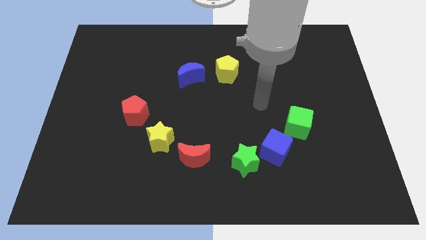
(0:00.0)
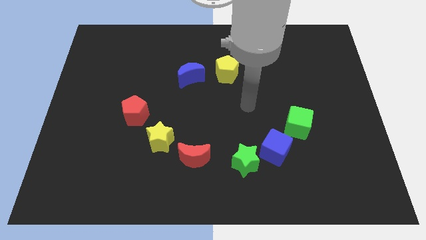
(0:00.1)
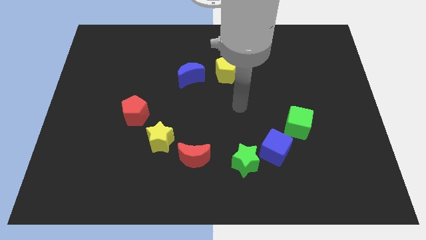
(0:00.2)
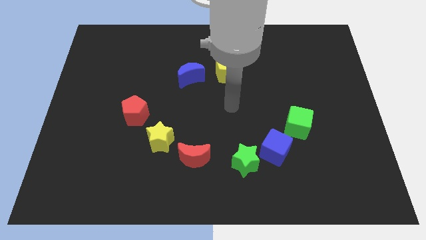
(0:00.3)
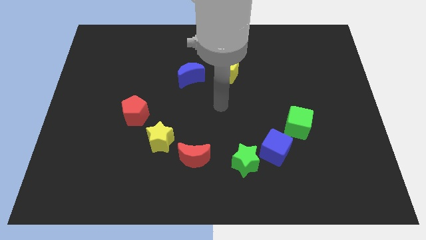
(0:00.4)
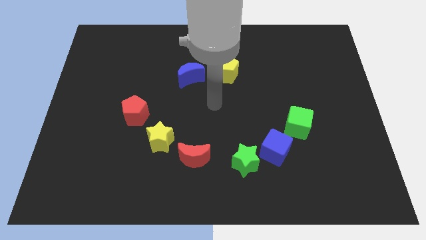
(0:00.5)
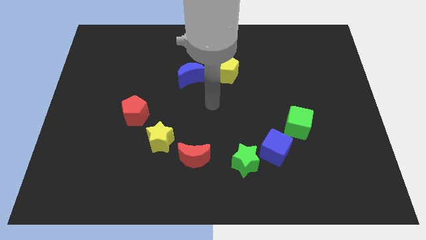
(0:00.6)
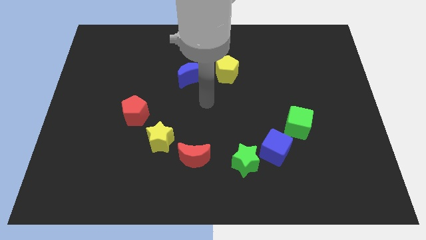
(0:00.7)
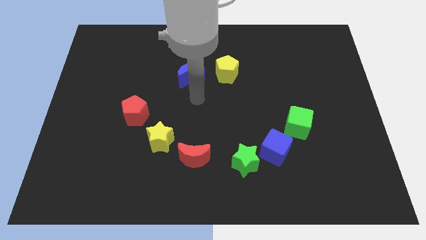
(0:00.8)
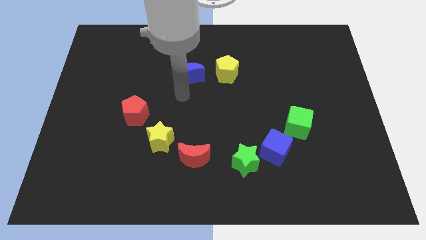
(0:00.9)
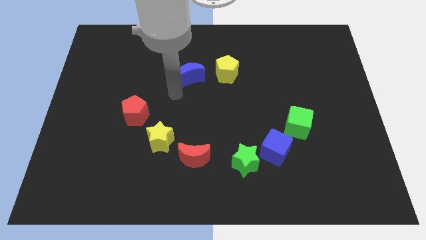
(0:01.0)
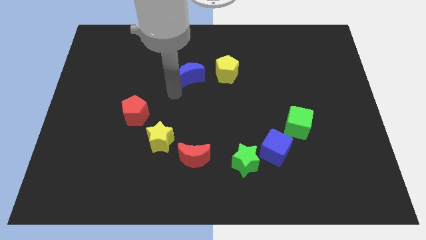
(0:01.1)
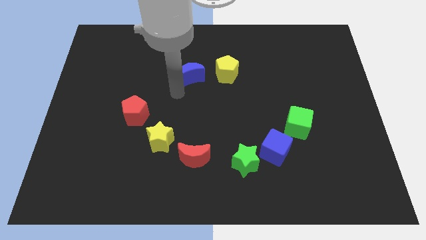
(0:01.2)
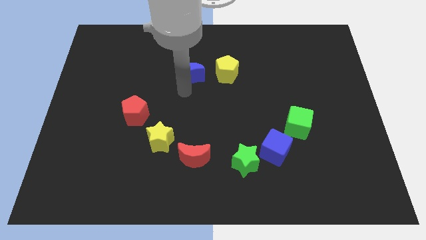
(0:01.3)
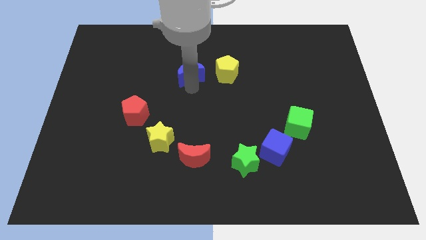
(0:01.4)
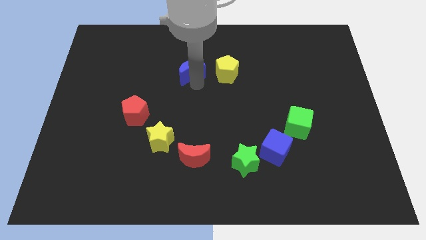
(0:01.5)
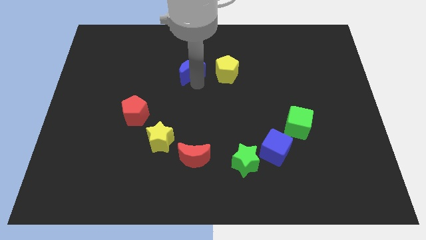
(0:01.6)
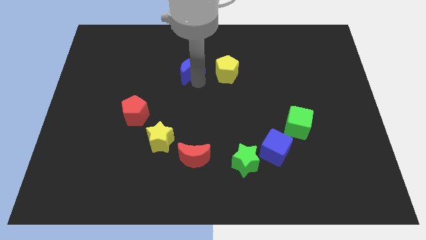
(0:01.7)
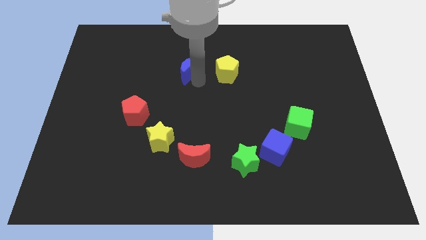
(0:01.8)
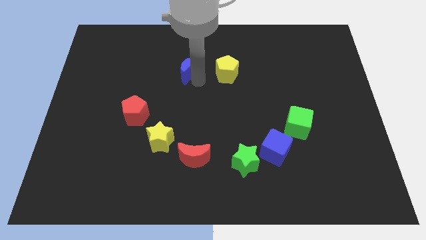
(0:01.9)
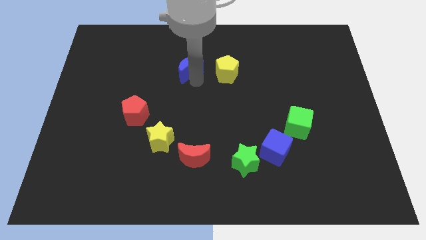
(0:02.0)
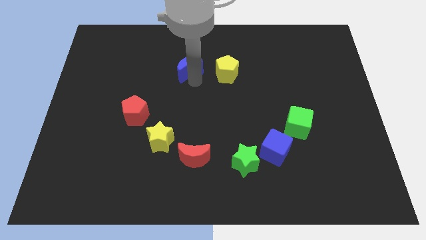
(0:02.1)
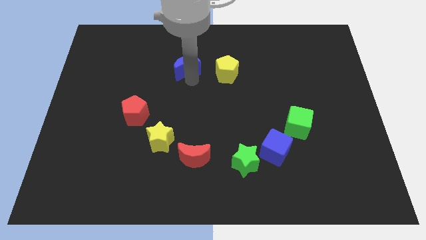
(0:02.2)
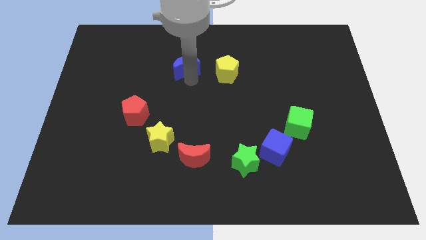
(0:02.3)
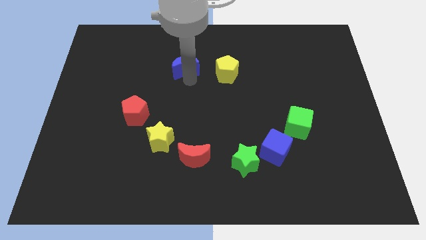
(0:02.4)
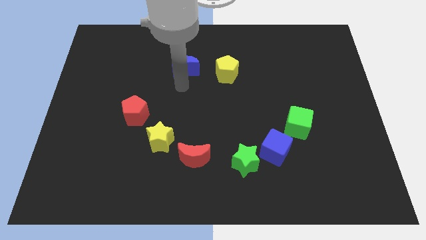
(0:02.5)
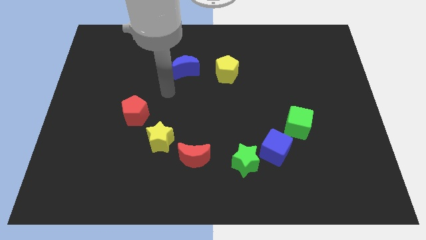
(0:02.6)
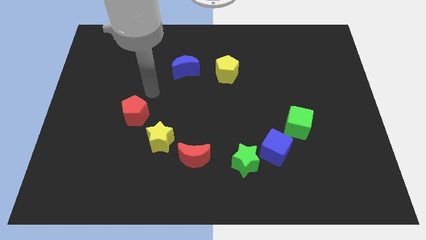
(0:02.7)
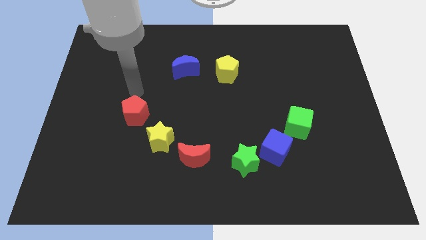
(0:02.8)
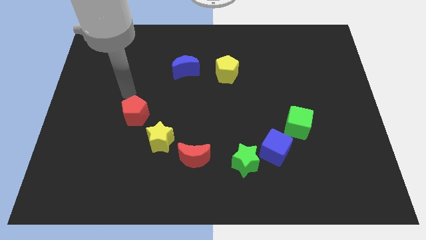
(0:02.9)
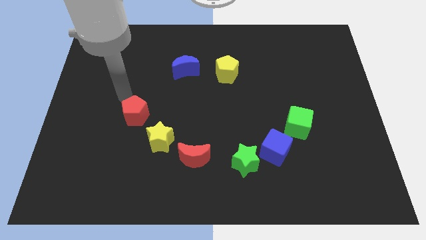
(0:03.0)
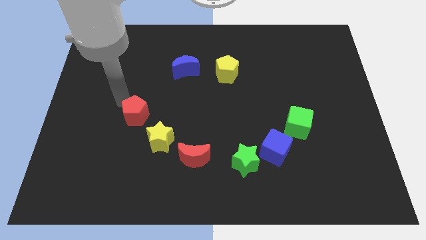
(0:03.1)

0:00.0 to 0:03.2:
place the blue moon parallel to the yellow pentagon

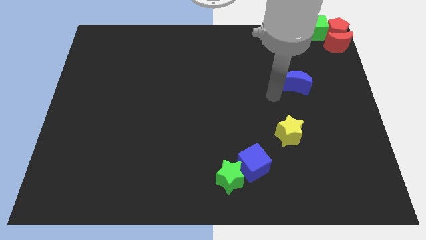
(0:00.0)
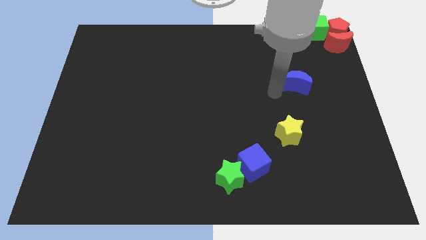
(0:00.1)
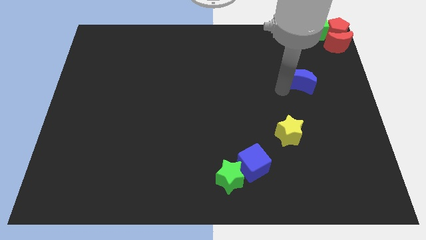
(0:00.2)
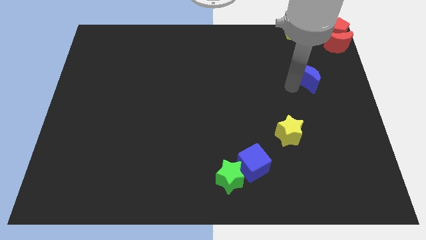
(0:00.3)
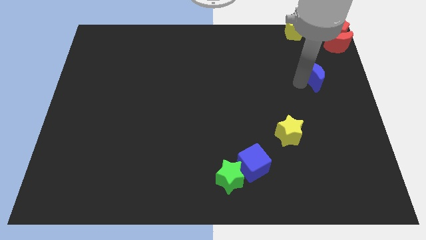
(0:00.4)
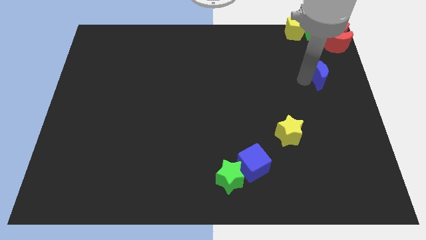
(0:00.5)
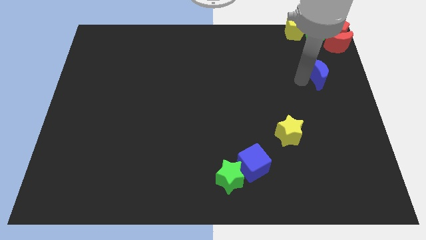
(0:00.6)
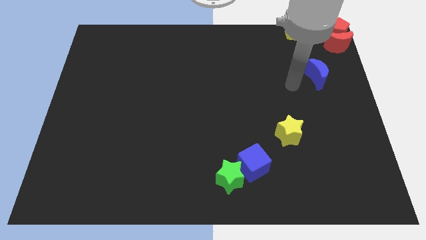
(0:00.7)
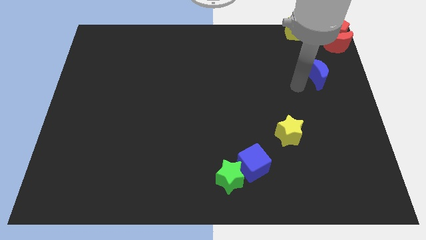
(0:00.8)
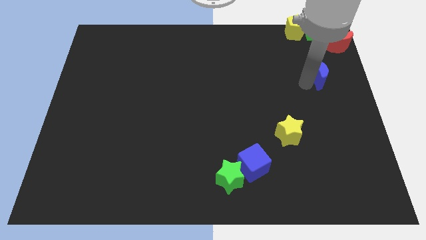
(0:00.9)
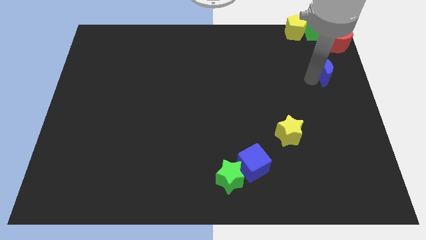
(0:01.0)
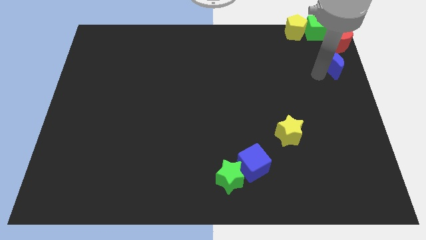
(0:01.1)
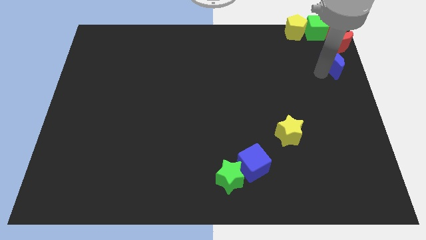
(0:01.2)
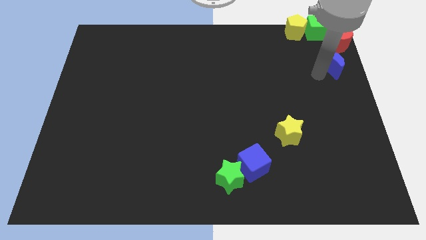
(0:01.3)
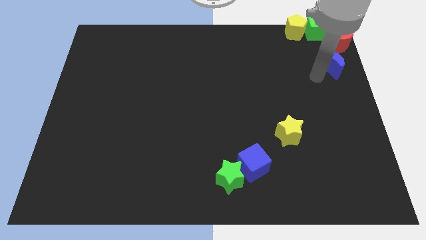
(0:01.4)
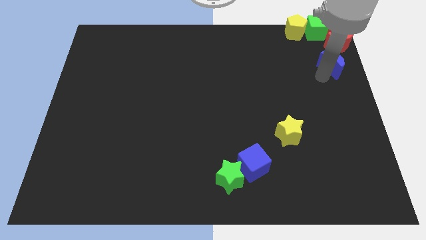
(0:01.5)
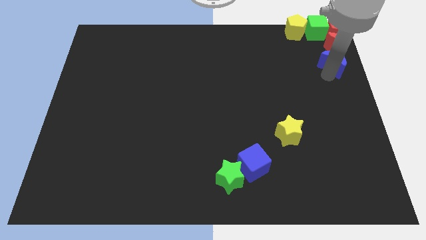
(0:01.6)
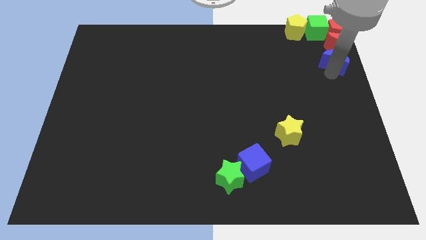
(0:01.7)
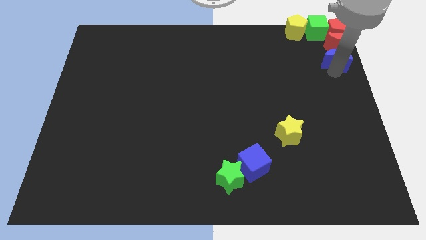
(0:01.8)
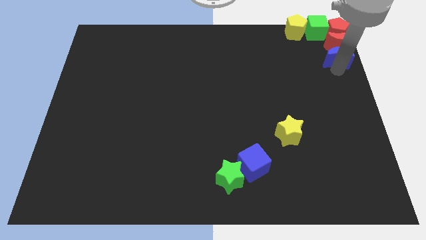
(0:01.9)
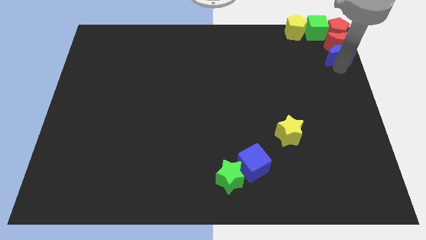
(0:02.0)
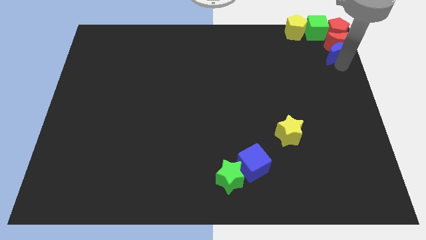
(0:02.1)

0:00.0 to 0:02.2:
place the blue moon below the red moon

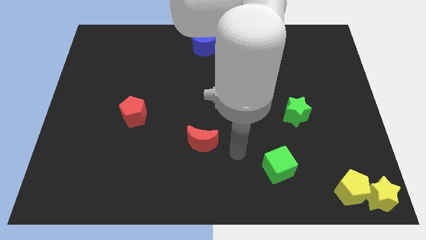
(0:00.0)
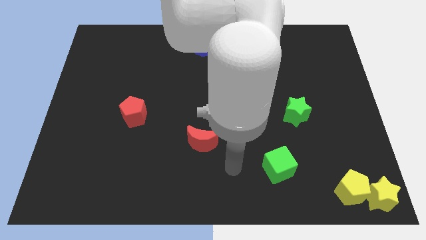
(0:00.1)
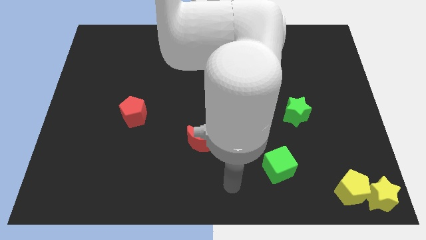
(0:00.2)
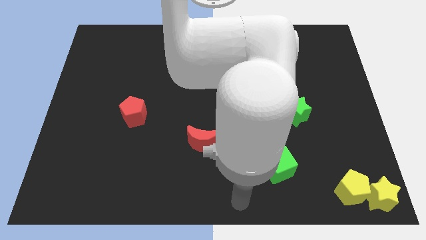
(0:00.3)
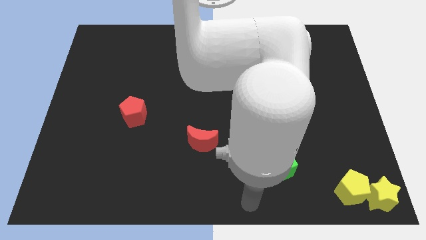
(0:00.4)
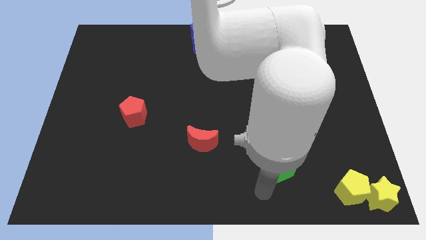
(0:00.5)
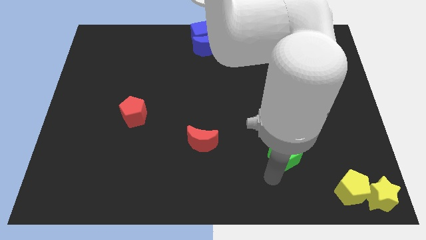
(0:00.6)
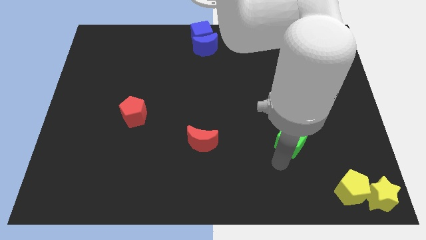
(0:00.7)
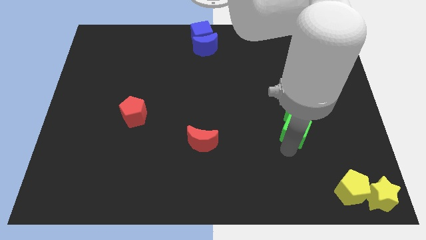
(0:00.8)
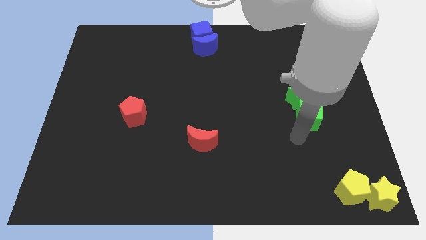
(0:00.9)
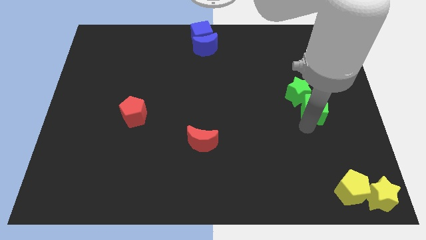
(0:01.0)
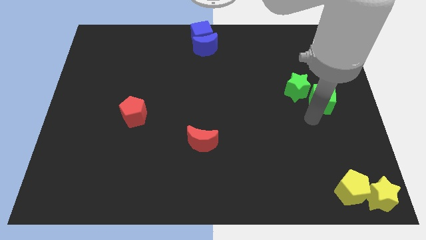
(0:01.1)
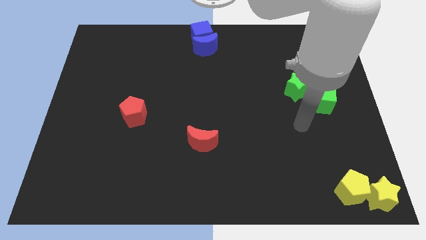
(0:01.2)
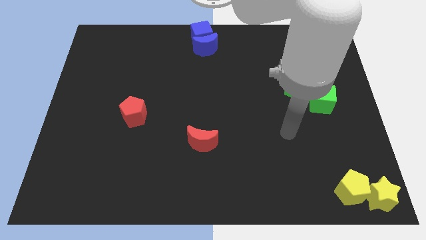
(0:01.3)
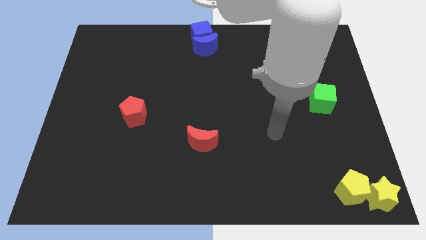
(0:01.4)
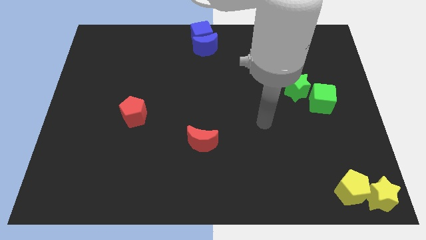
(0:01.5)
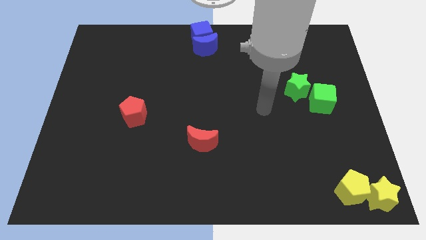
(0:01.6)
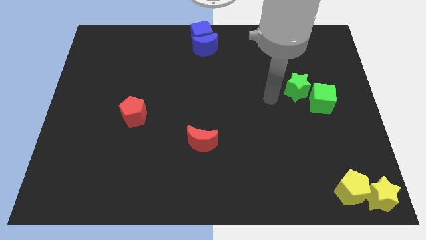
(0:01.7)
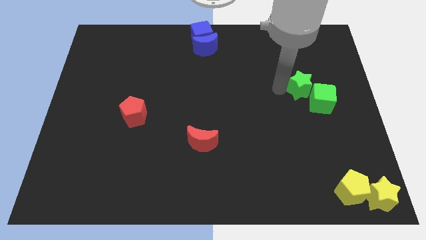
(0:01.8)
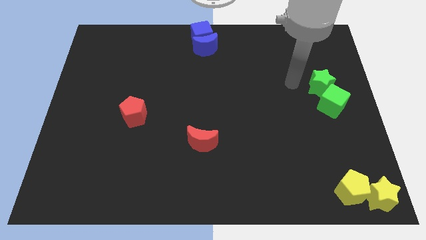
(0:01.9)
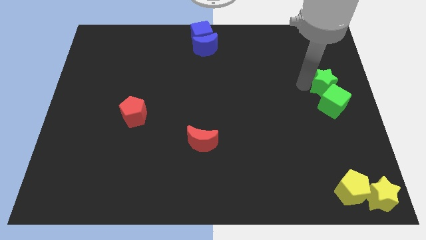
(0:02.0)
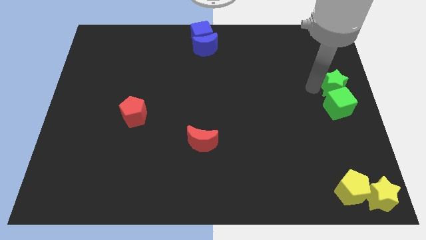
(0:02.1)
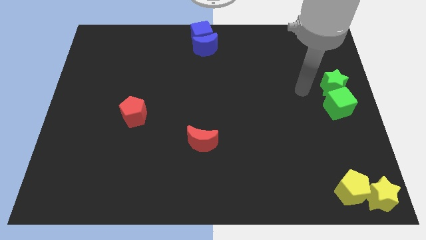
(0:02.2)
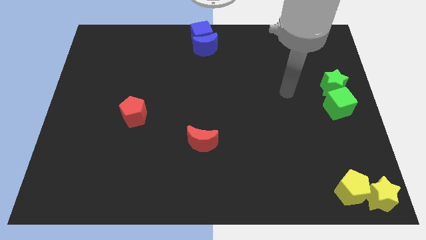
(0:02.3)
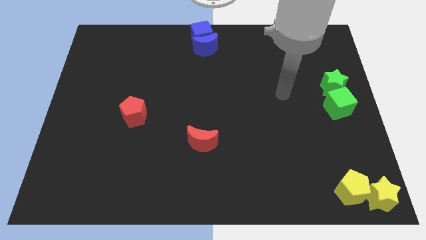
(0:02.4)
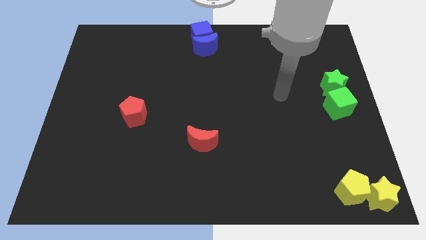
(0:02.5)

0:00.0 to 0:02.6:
place the green blocks to the top right side the yellow blocks

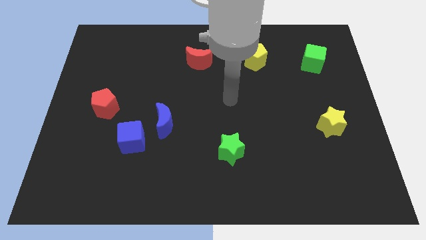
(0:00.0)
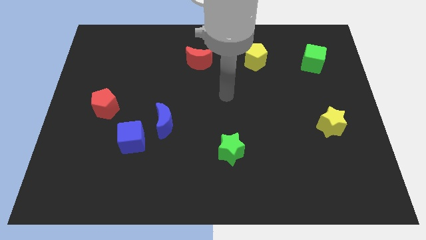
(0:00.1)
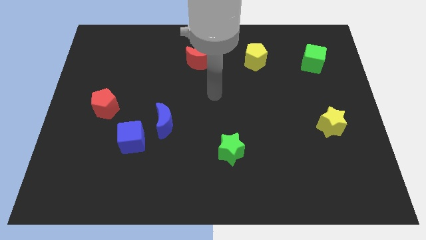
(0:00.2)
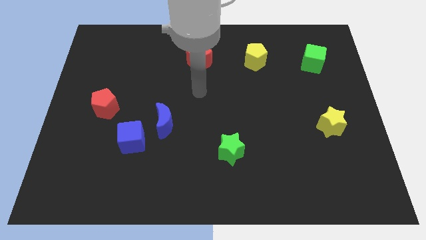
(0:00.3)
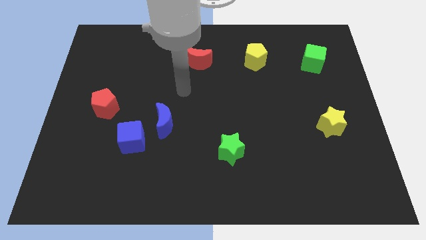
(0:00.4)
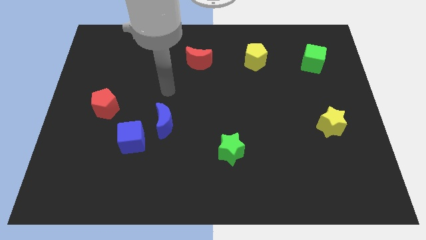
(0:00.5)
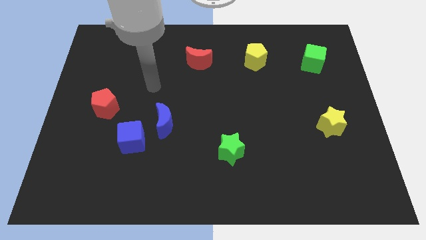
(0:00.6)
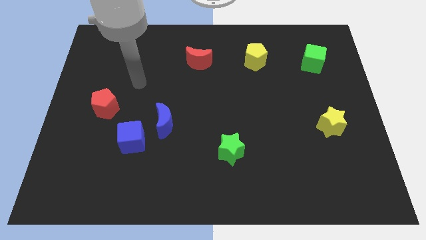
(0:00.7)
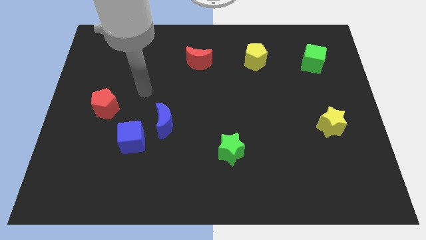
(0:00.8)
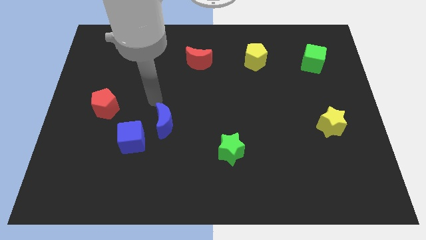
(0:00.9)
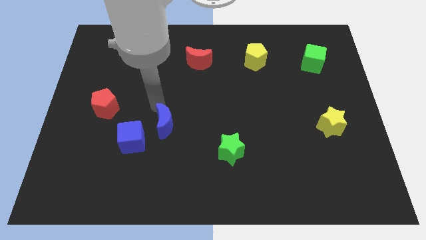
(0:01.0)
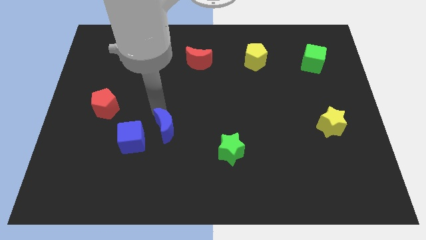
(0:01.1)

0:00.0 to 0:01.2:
touch the top side of the blue crescent
